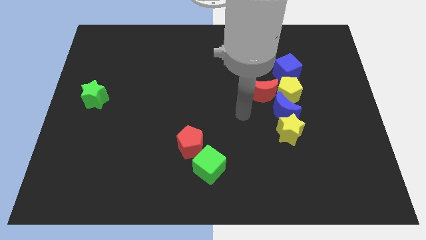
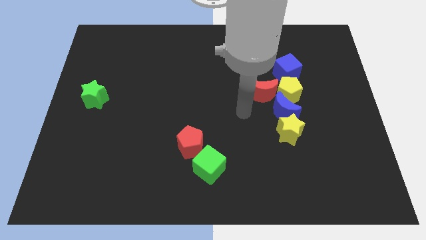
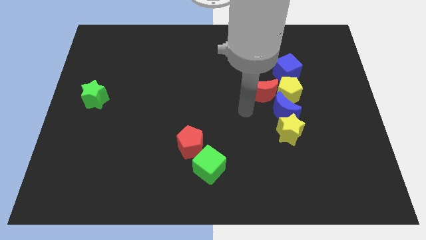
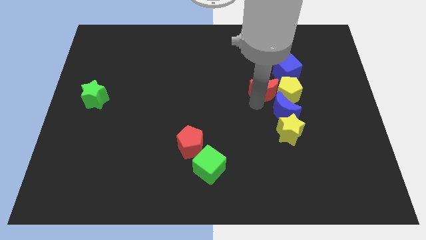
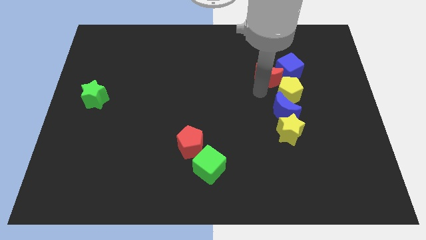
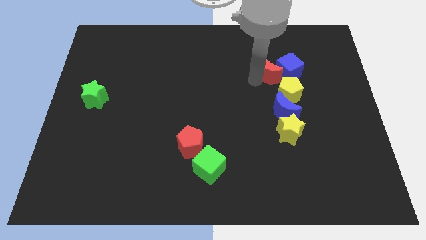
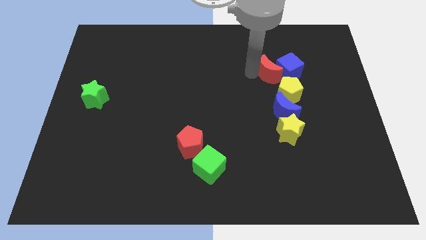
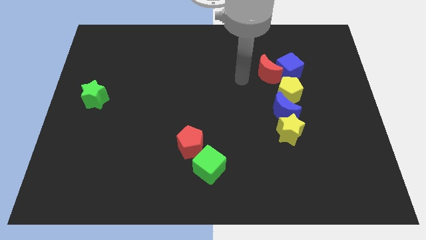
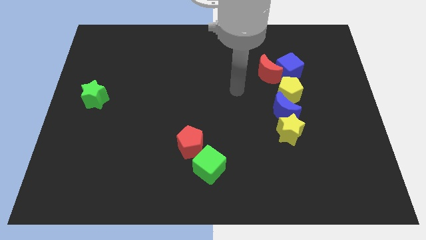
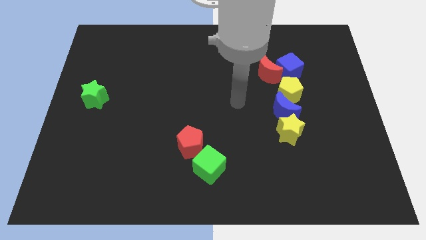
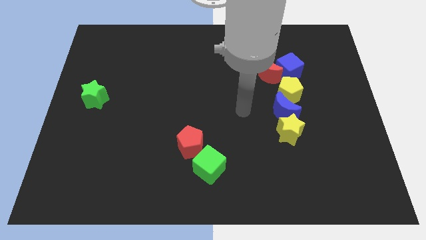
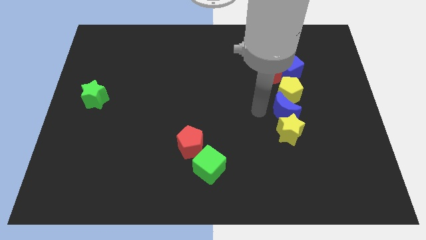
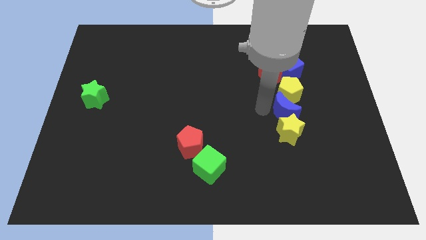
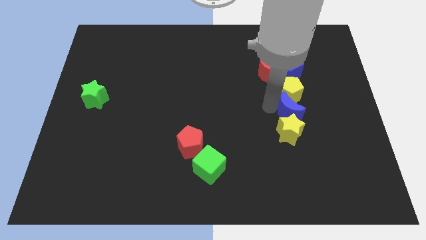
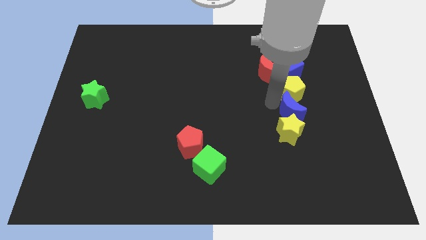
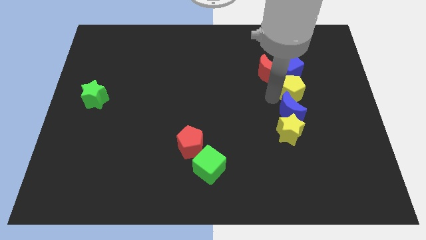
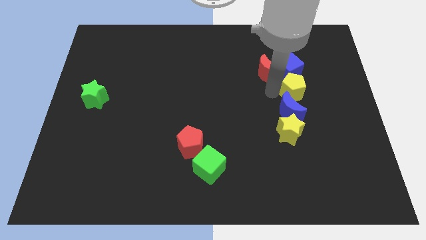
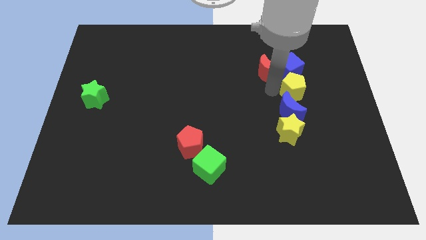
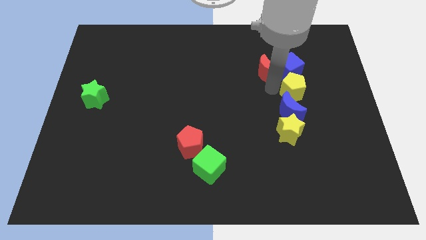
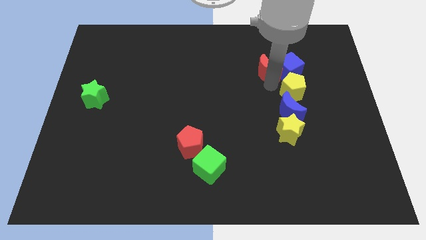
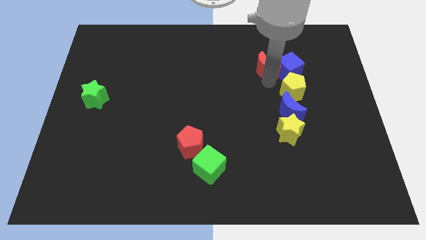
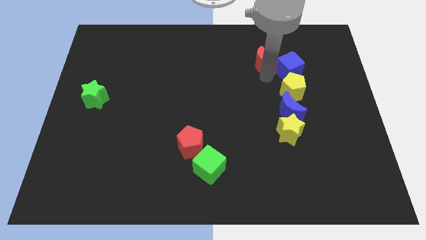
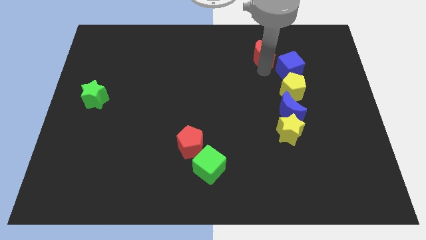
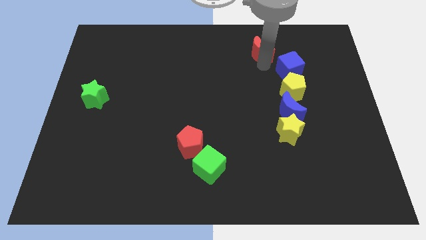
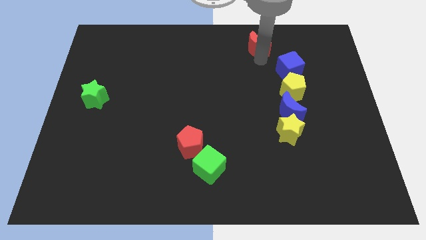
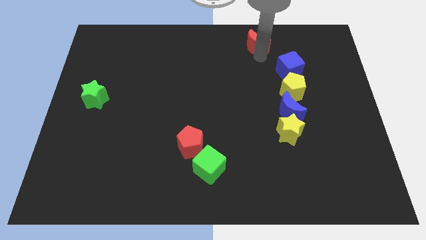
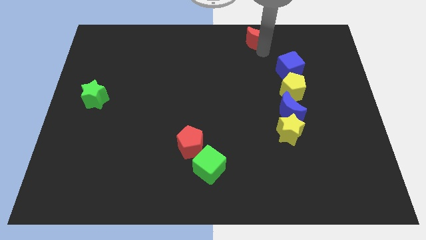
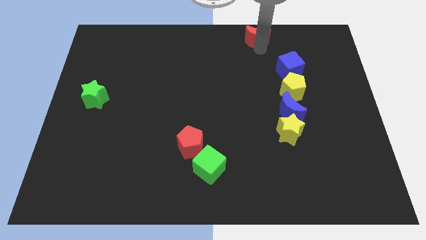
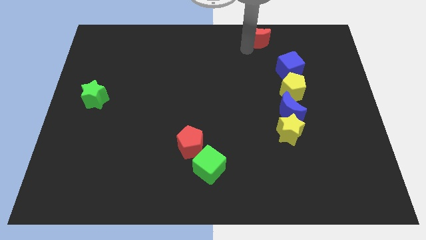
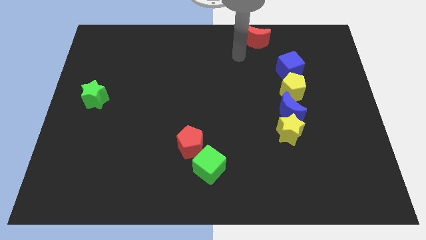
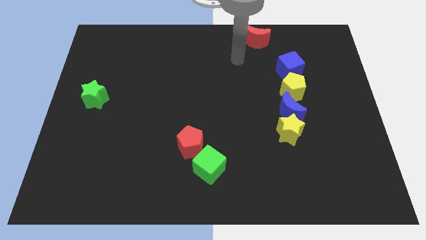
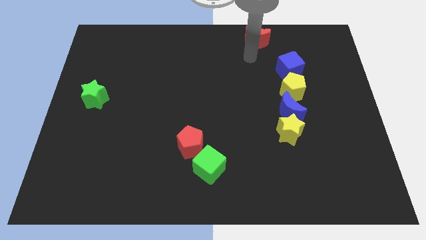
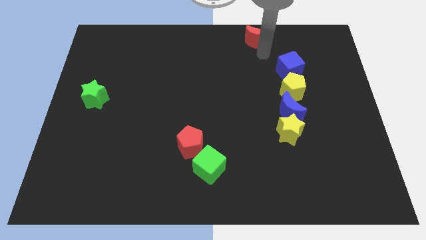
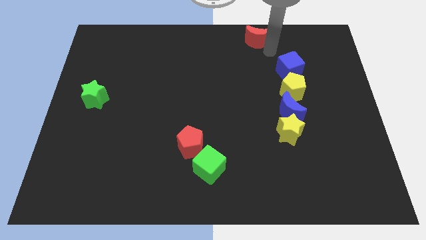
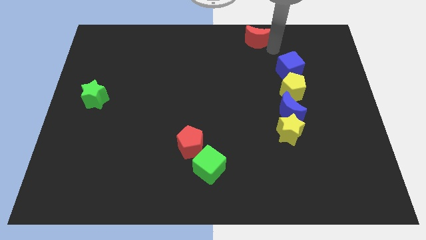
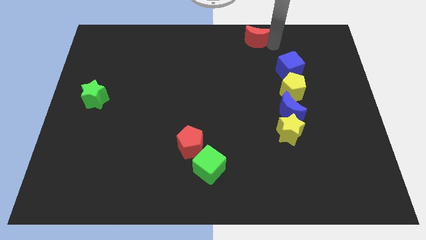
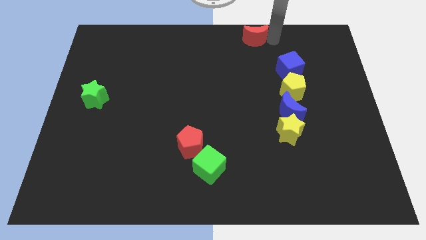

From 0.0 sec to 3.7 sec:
move the red crescent to the top of the board

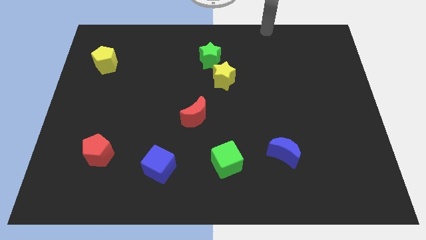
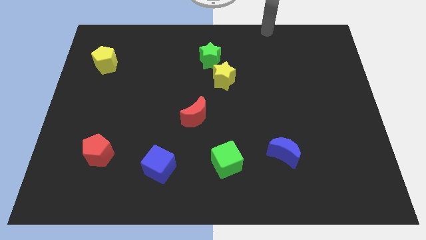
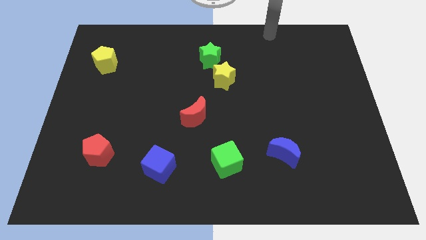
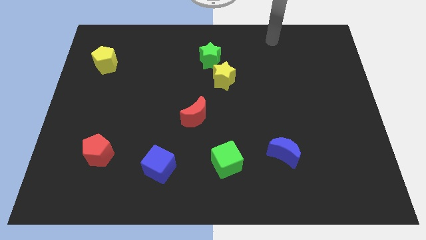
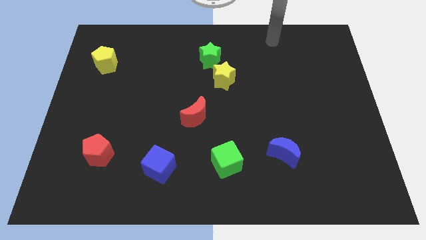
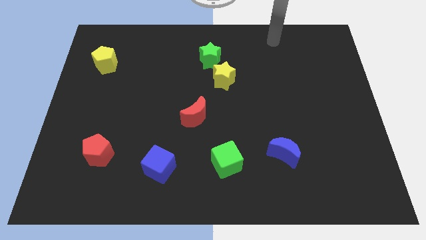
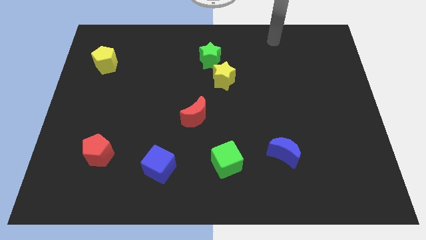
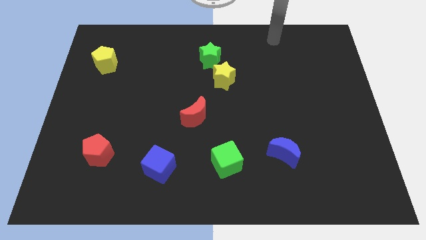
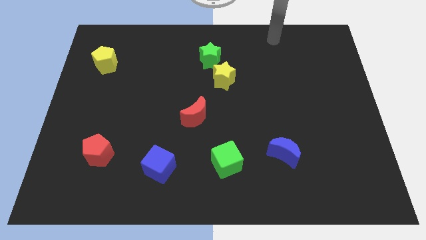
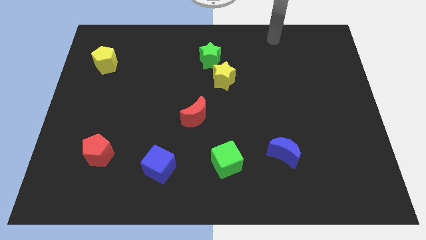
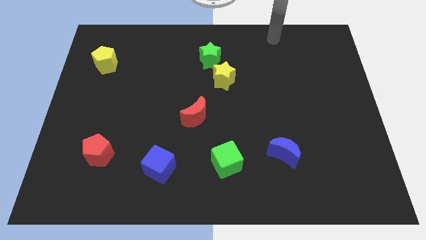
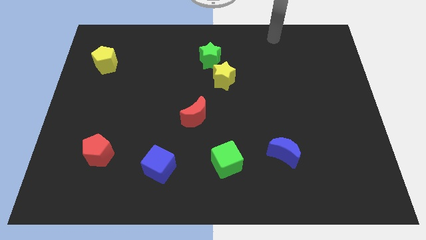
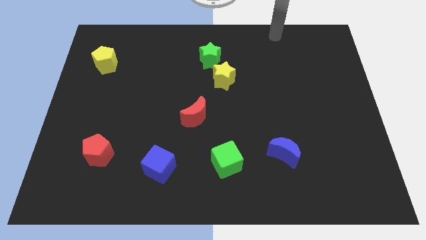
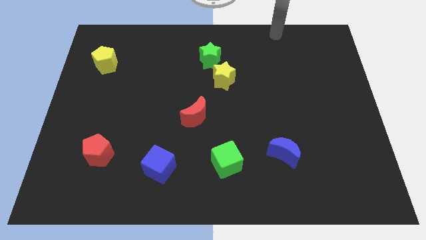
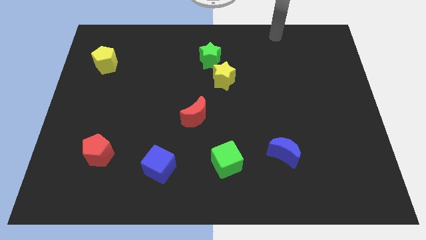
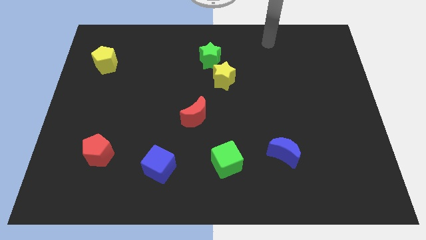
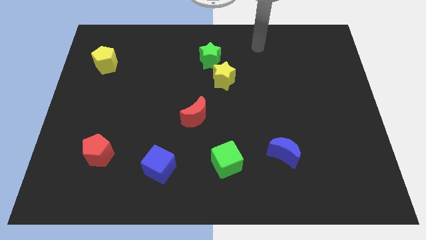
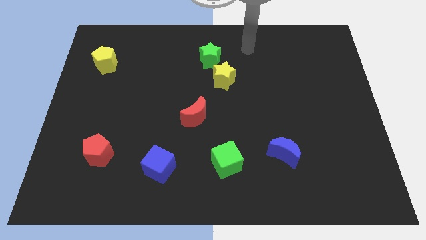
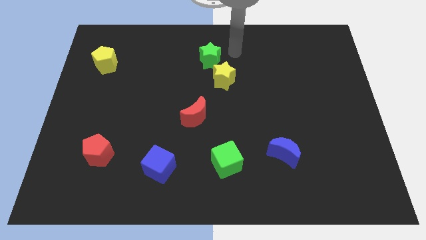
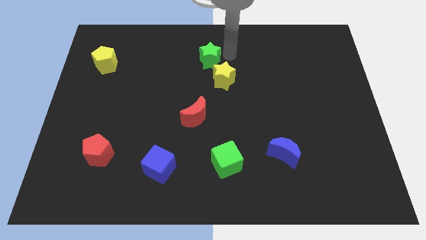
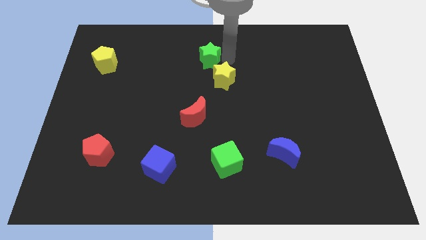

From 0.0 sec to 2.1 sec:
point the arm at the top of the yellow star

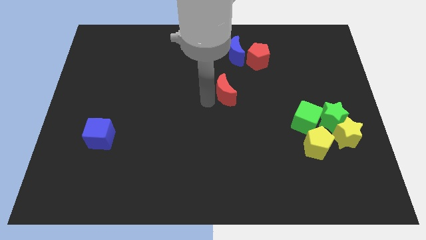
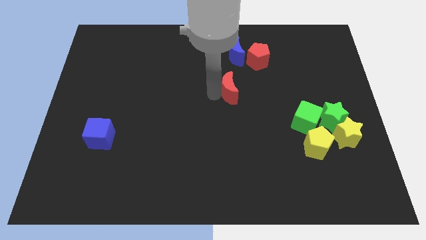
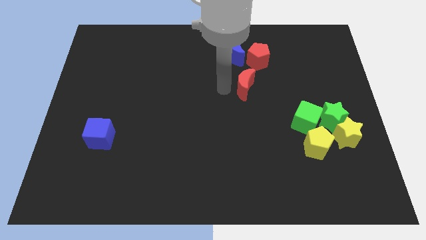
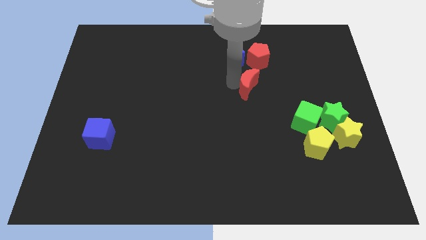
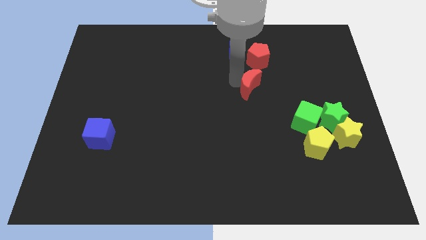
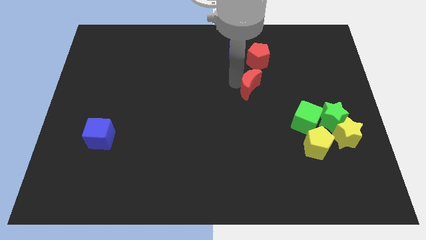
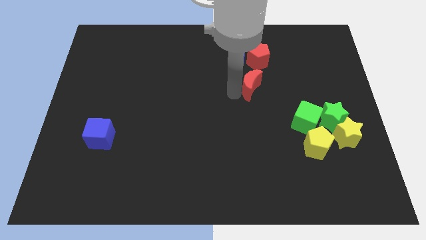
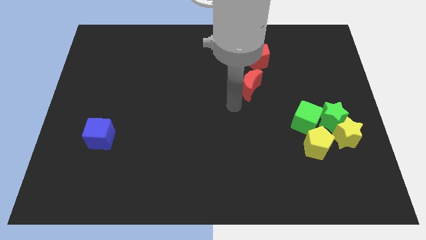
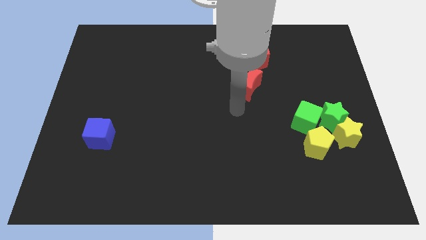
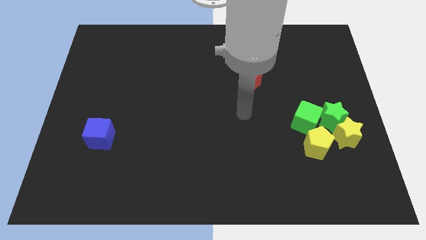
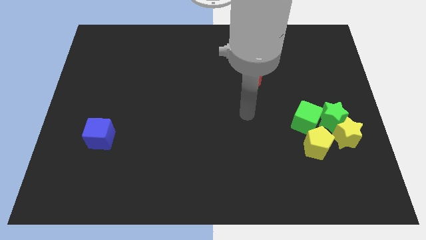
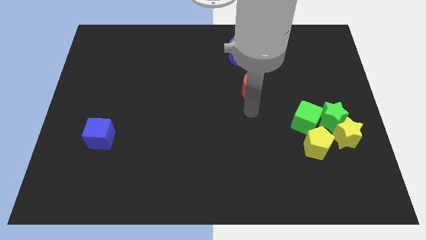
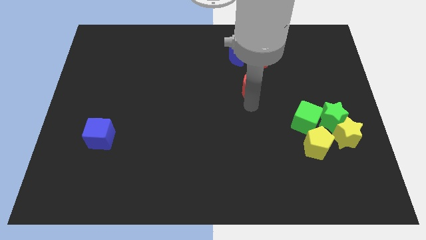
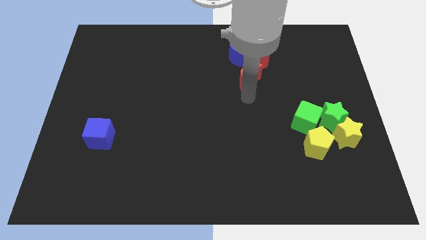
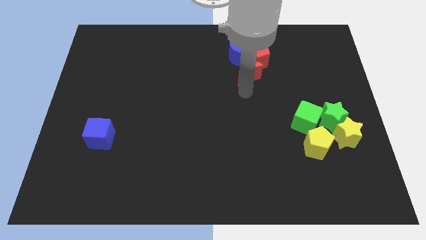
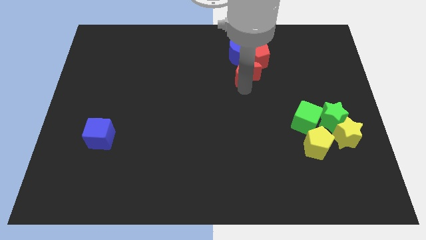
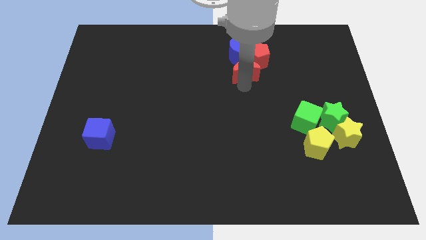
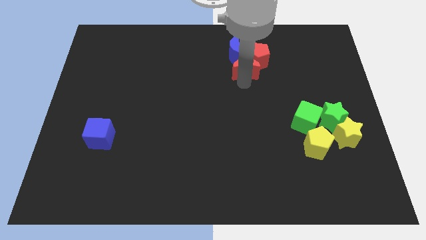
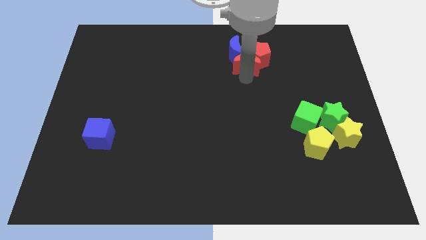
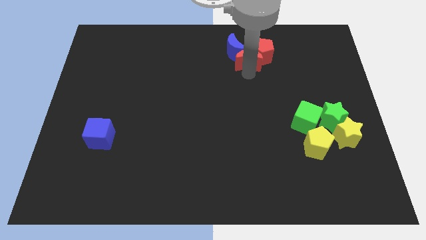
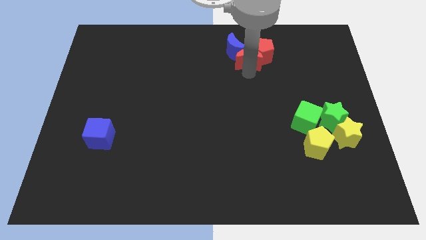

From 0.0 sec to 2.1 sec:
move the red moon into the group of blocks

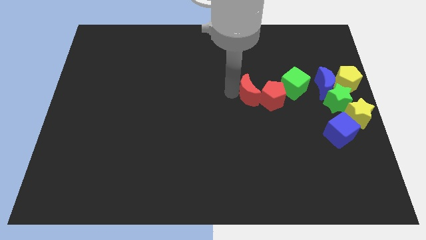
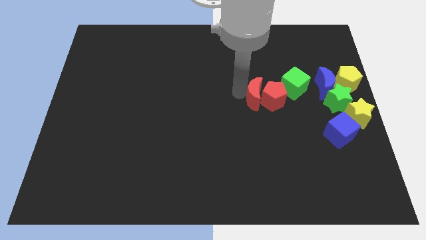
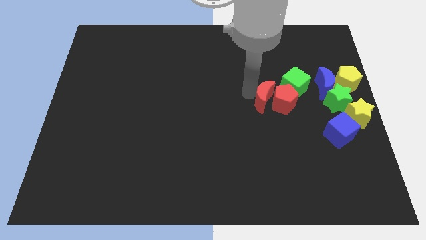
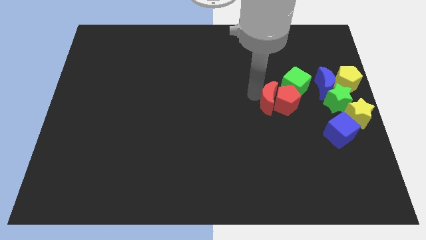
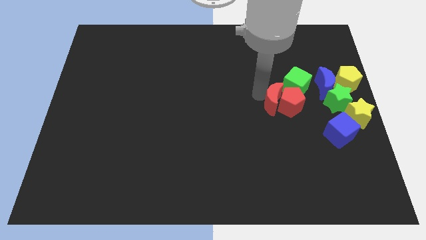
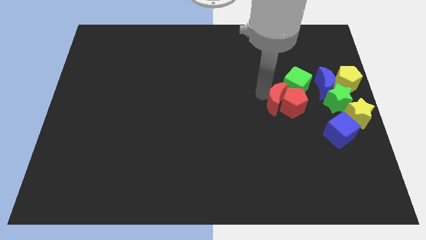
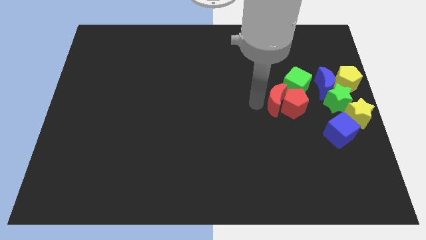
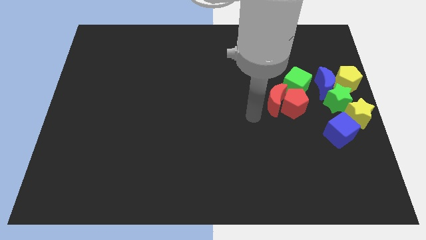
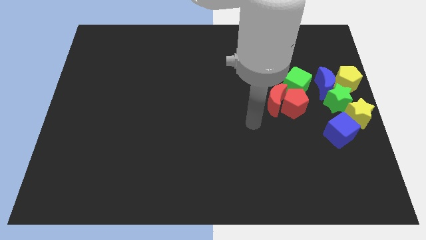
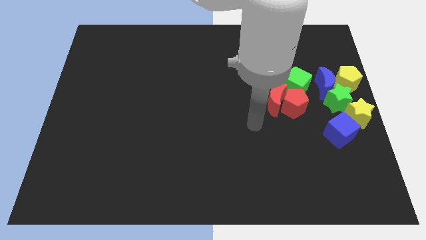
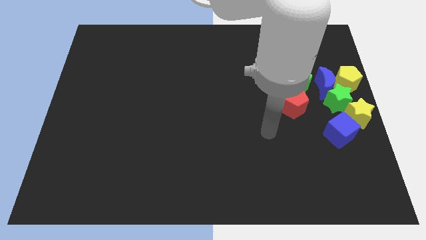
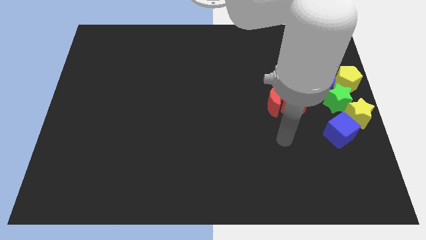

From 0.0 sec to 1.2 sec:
move the red crescent and red pentagon slightly right
